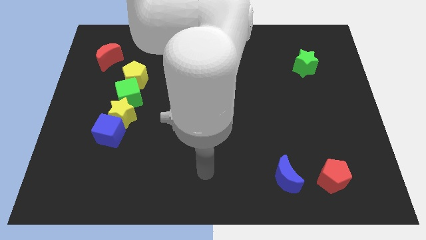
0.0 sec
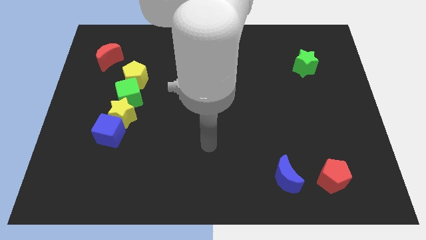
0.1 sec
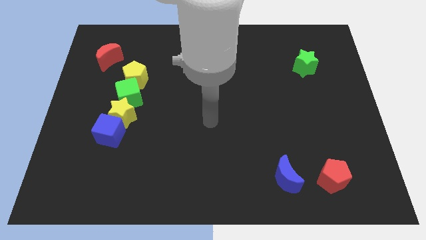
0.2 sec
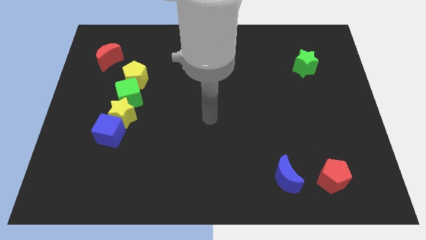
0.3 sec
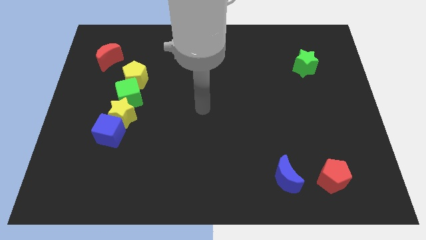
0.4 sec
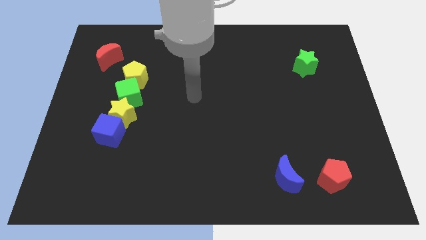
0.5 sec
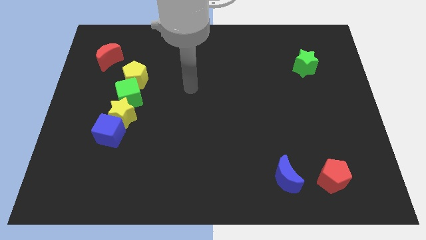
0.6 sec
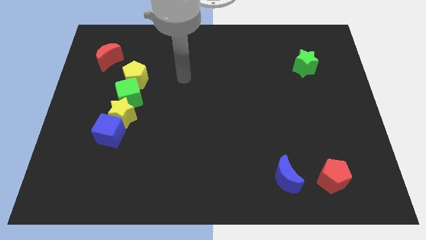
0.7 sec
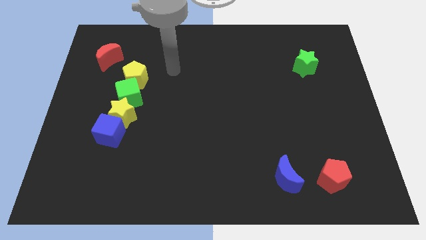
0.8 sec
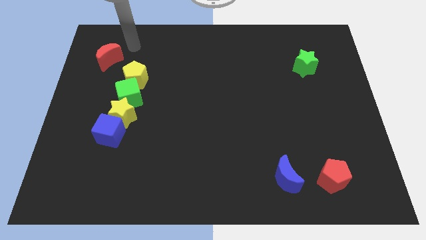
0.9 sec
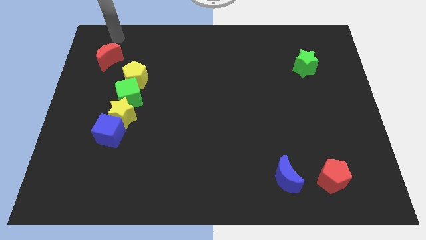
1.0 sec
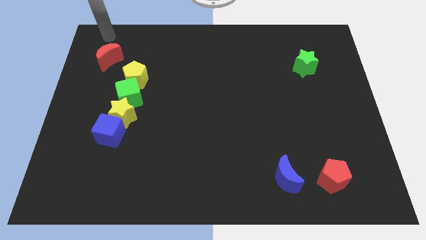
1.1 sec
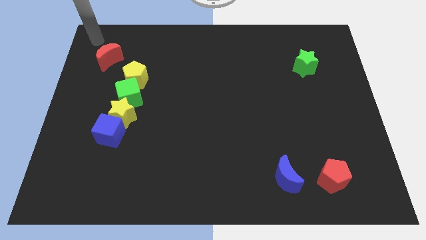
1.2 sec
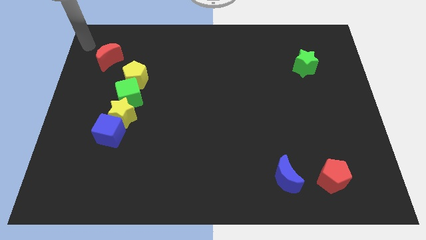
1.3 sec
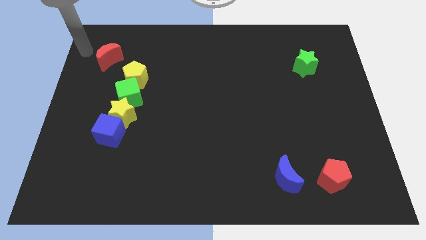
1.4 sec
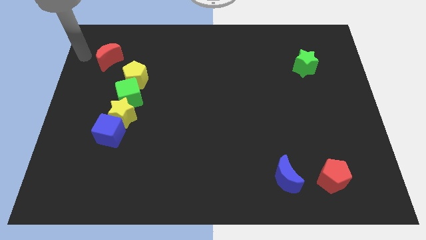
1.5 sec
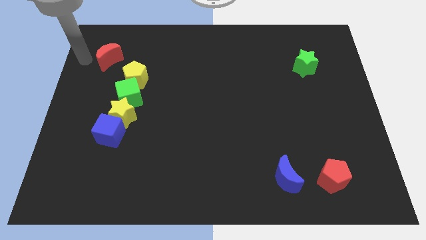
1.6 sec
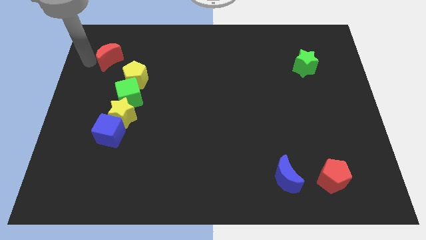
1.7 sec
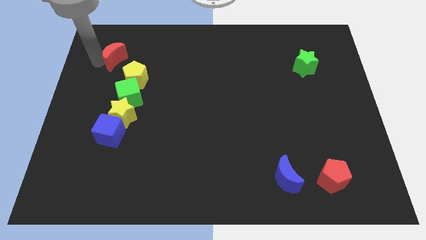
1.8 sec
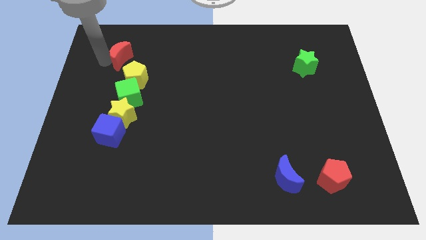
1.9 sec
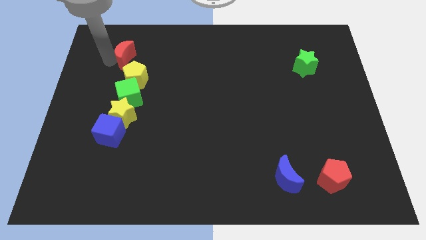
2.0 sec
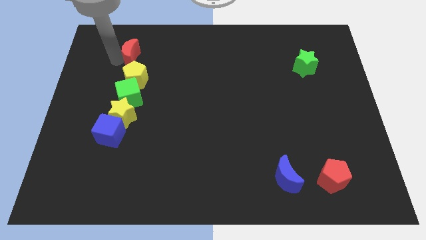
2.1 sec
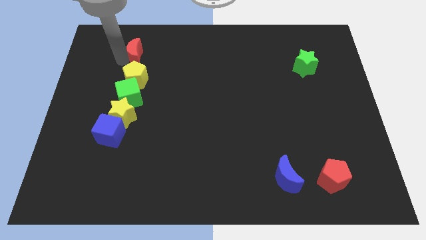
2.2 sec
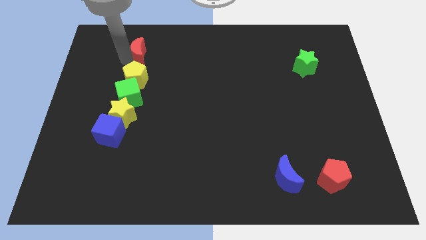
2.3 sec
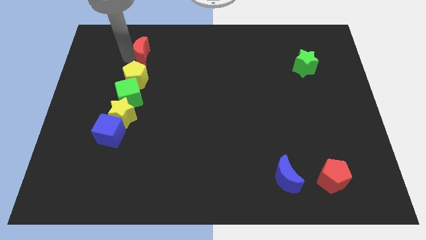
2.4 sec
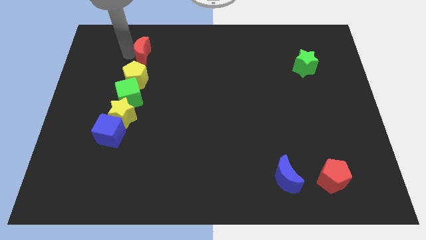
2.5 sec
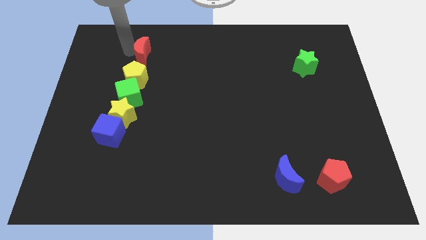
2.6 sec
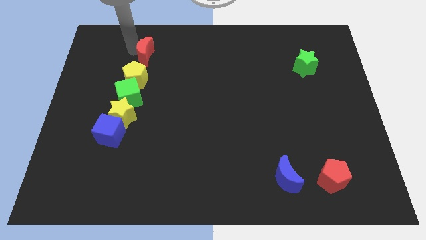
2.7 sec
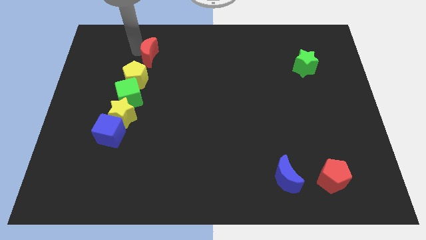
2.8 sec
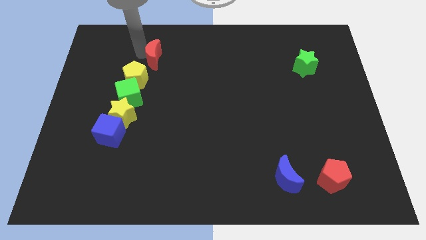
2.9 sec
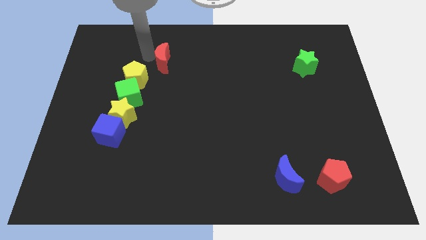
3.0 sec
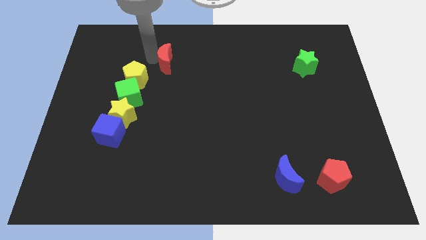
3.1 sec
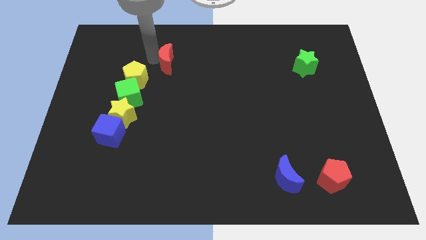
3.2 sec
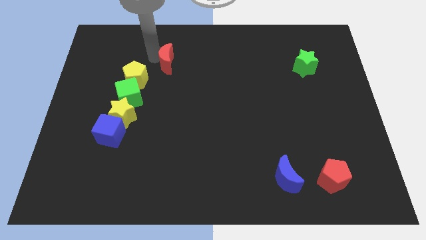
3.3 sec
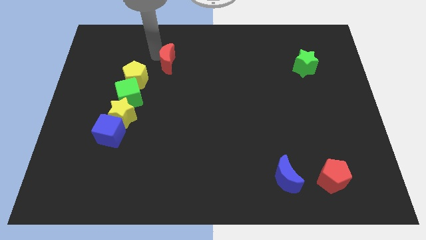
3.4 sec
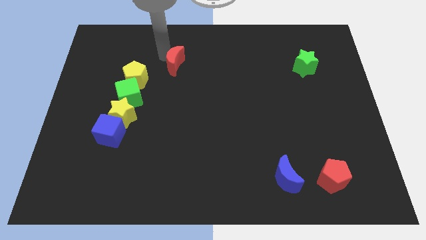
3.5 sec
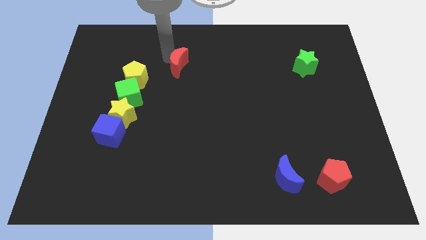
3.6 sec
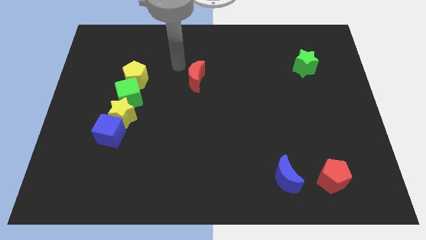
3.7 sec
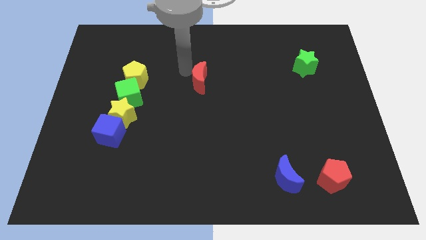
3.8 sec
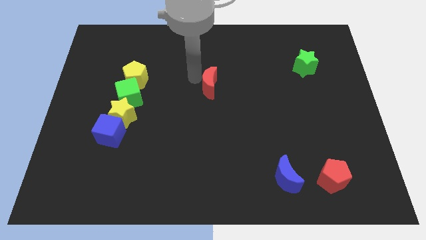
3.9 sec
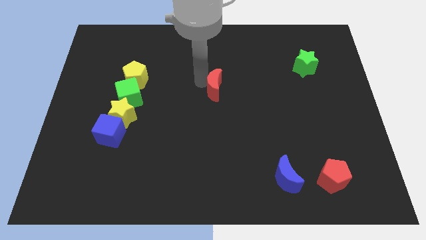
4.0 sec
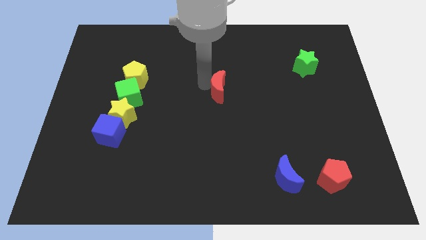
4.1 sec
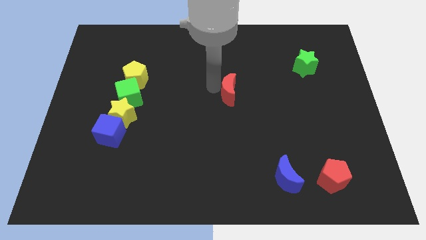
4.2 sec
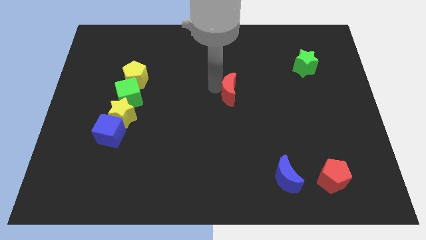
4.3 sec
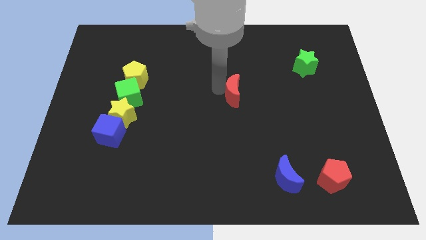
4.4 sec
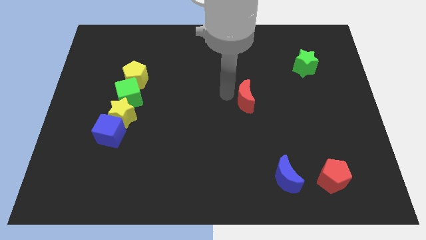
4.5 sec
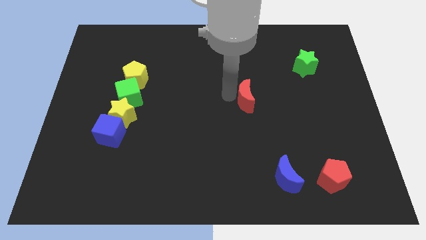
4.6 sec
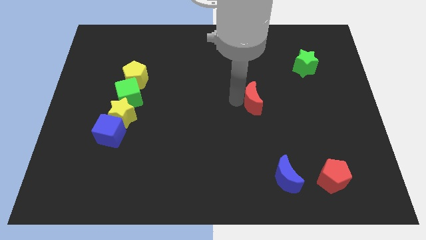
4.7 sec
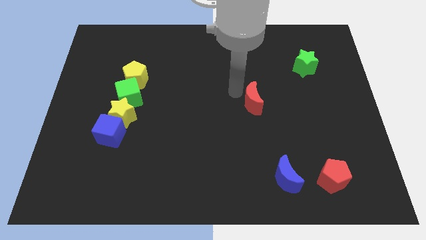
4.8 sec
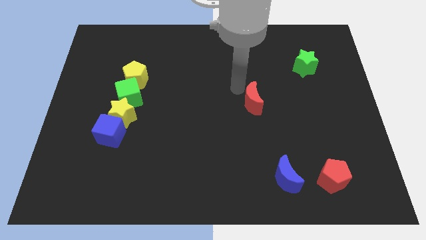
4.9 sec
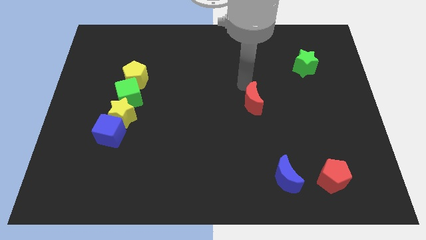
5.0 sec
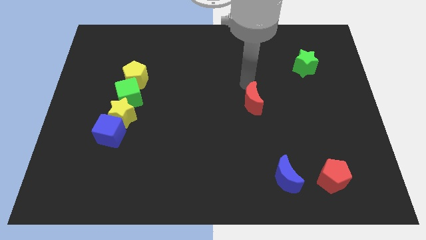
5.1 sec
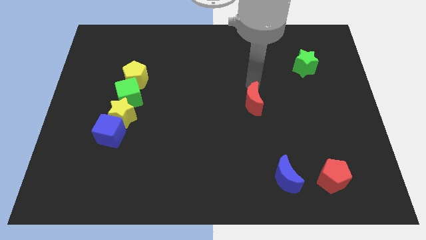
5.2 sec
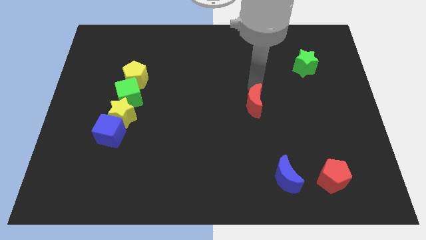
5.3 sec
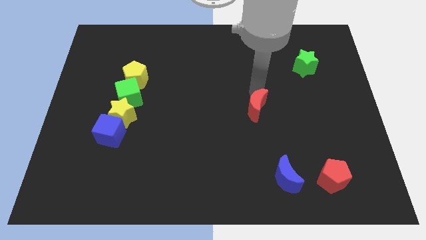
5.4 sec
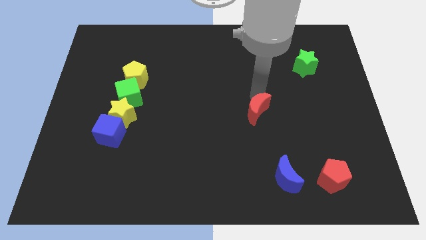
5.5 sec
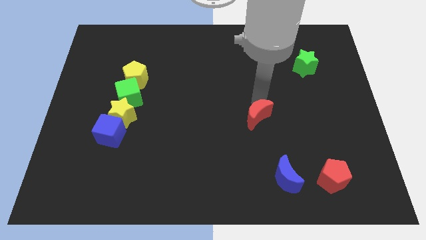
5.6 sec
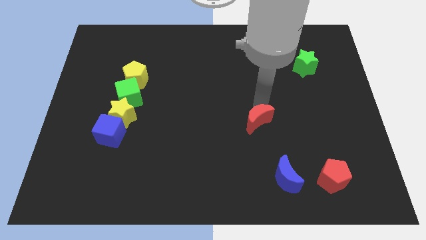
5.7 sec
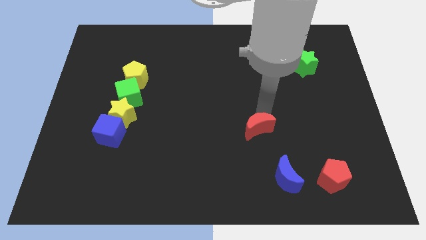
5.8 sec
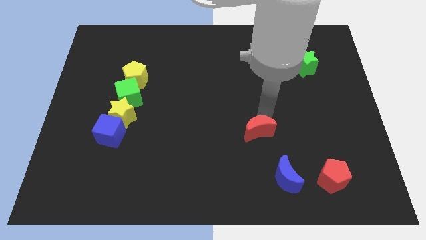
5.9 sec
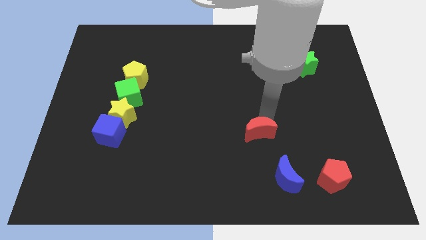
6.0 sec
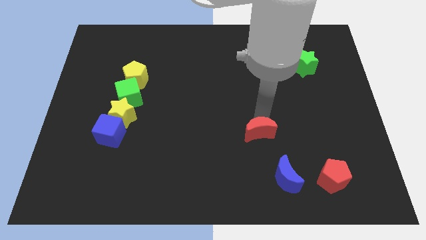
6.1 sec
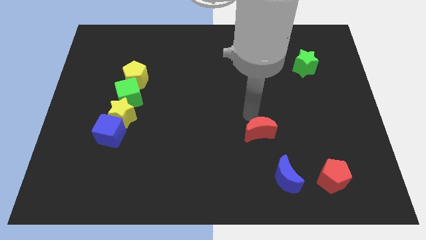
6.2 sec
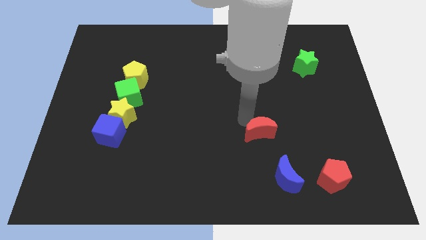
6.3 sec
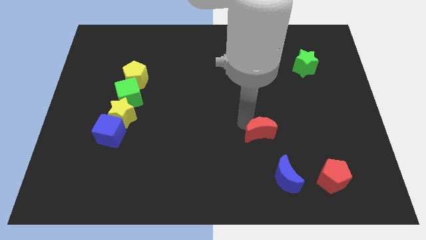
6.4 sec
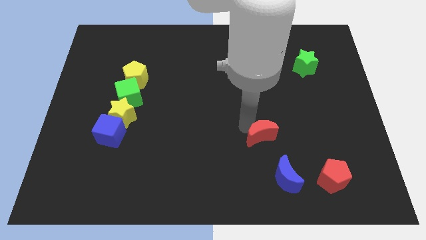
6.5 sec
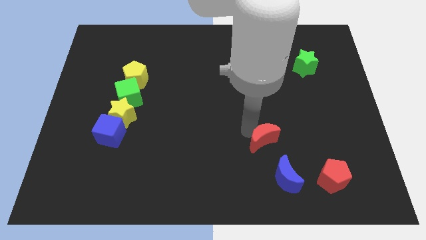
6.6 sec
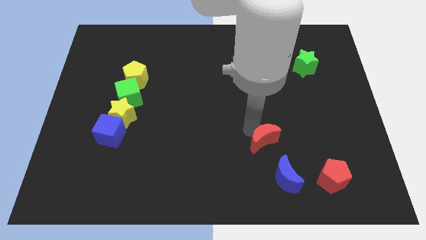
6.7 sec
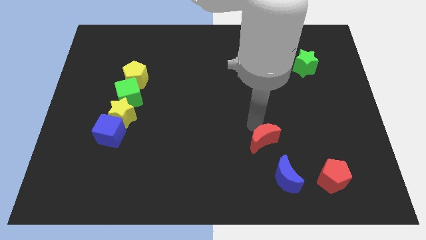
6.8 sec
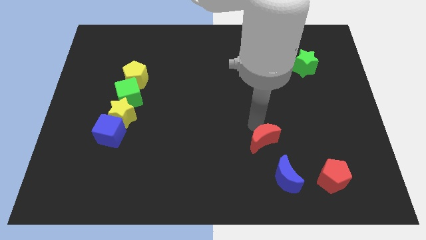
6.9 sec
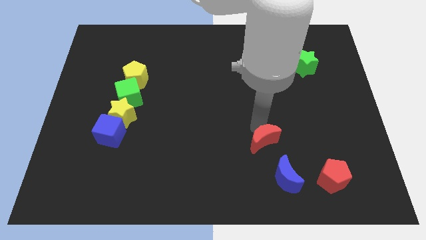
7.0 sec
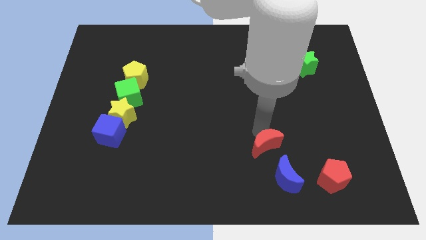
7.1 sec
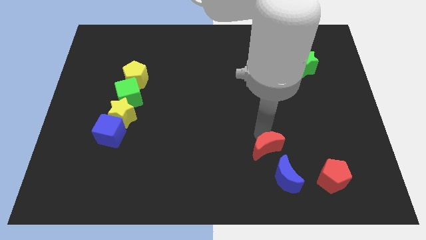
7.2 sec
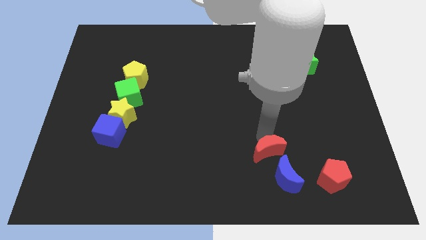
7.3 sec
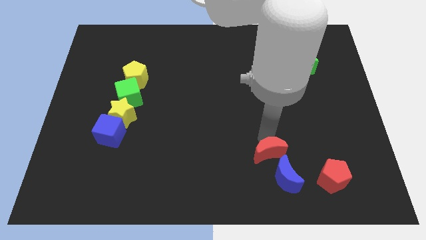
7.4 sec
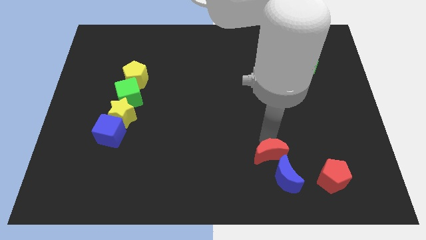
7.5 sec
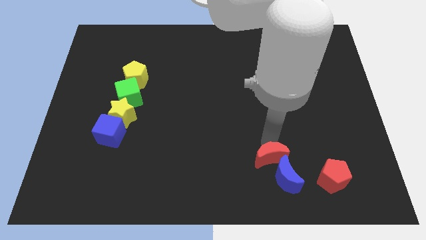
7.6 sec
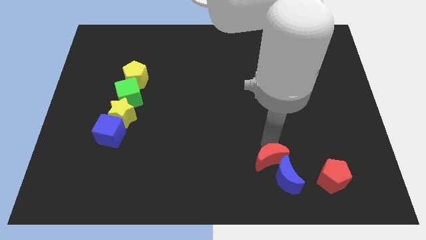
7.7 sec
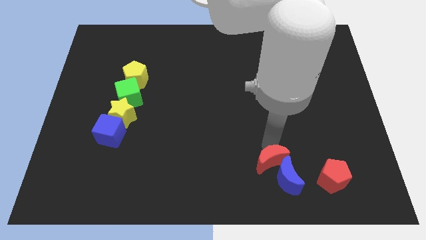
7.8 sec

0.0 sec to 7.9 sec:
move the red moon towards the blue moon

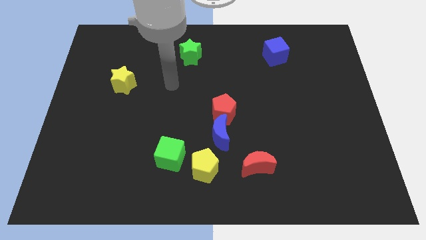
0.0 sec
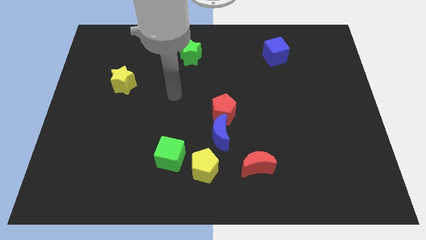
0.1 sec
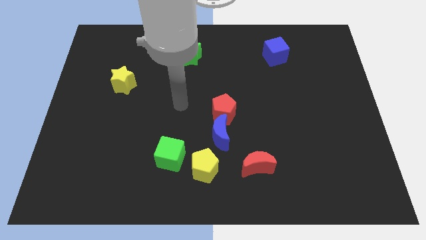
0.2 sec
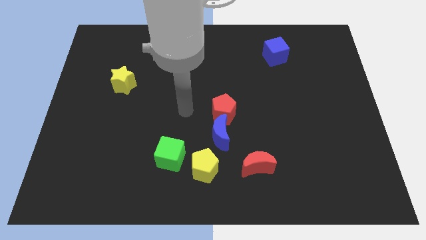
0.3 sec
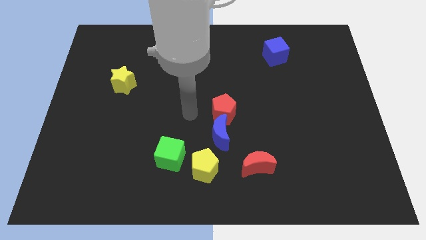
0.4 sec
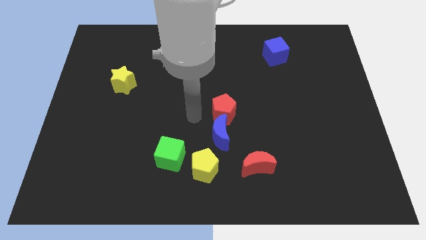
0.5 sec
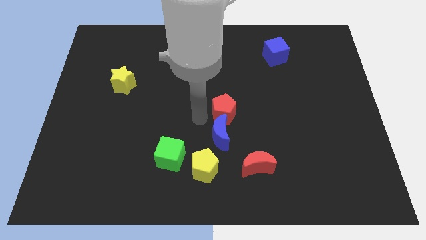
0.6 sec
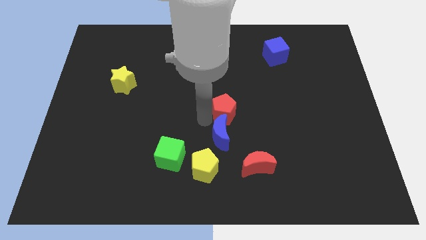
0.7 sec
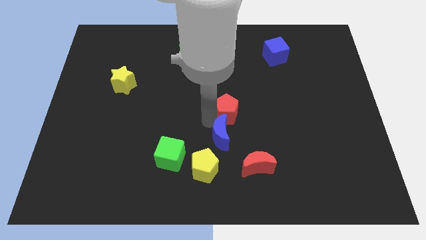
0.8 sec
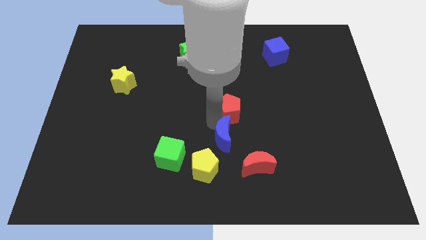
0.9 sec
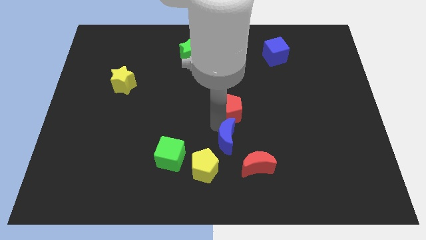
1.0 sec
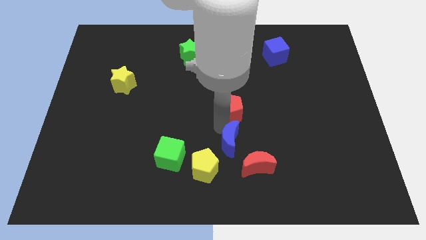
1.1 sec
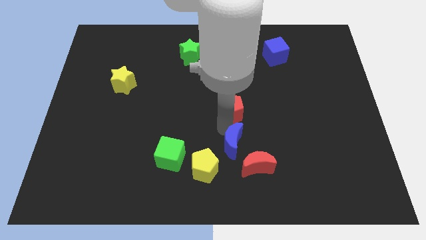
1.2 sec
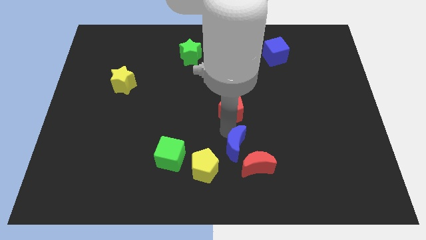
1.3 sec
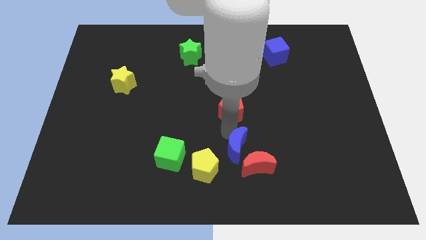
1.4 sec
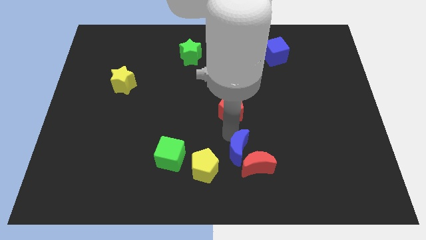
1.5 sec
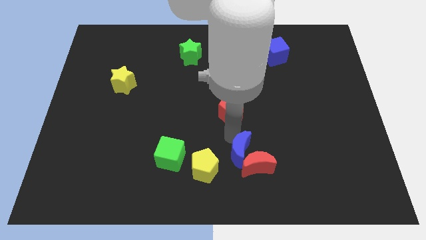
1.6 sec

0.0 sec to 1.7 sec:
move the blue moon next to the red moon
